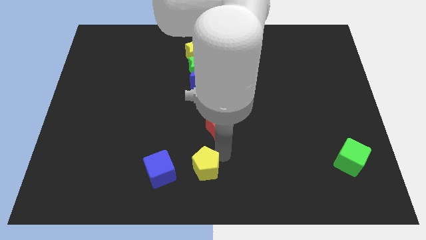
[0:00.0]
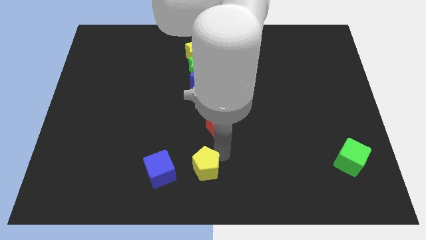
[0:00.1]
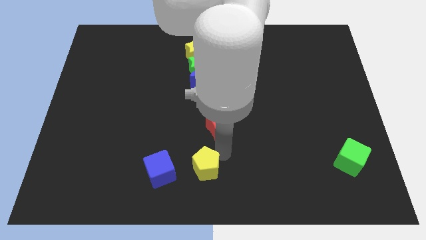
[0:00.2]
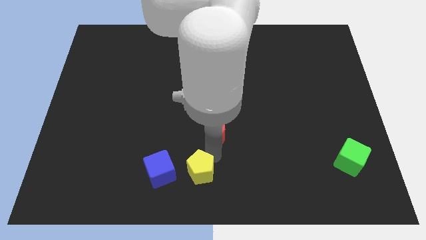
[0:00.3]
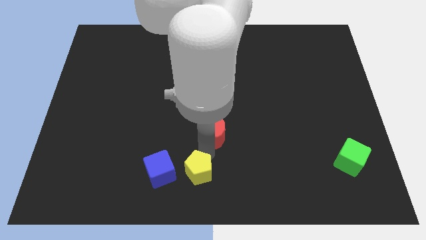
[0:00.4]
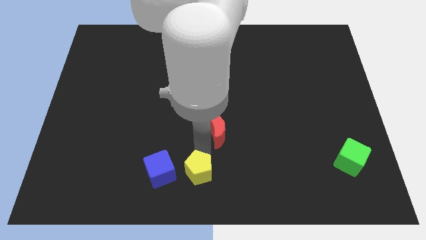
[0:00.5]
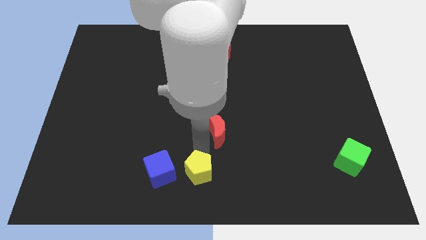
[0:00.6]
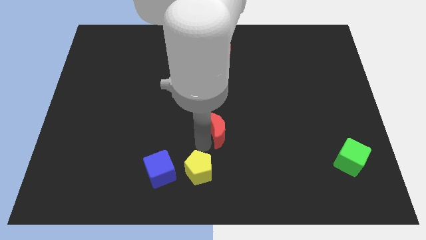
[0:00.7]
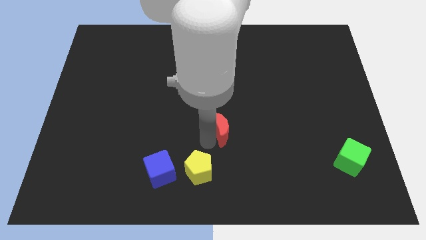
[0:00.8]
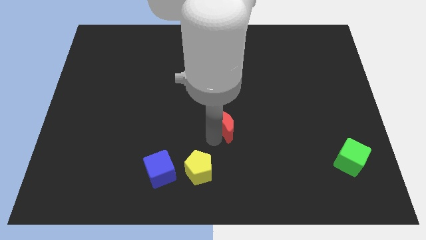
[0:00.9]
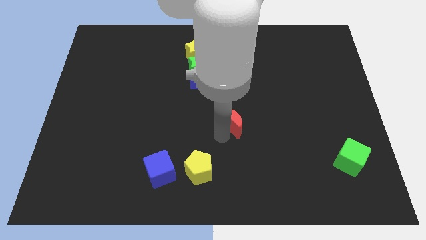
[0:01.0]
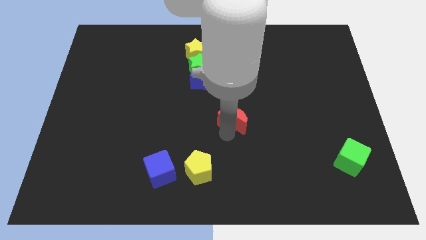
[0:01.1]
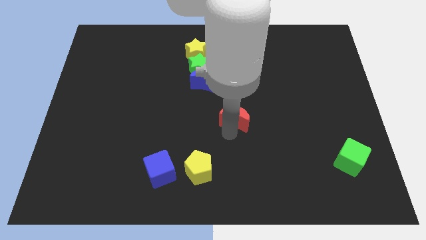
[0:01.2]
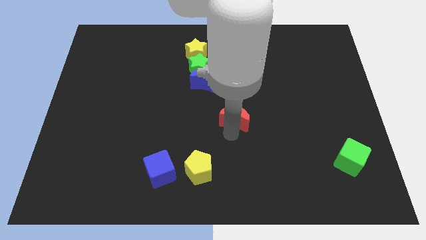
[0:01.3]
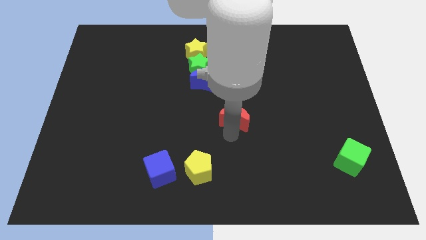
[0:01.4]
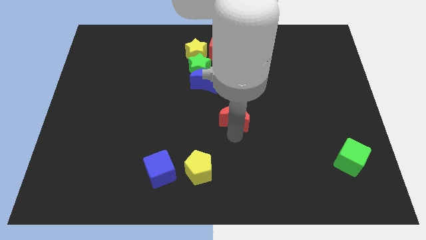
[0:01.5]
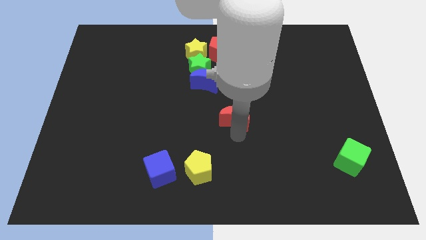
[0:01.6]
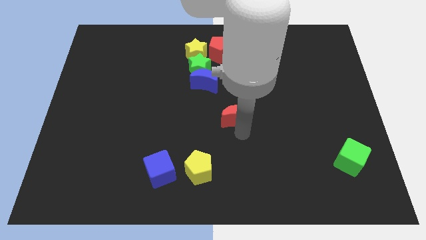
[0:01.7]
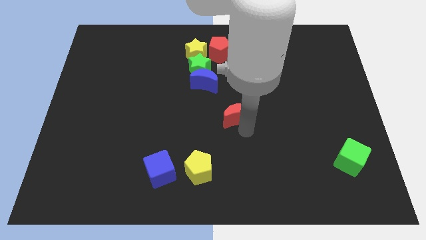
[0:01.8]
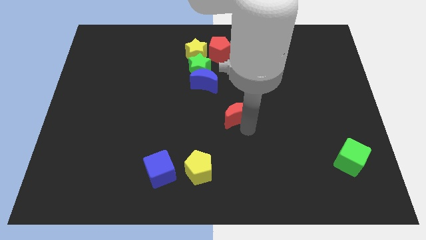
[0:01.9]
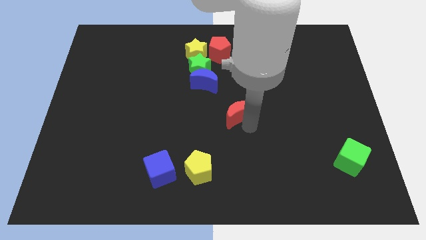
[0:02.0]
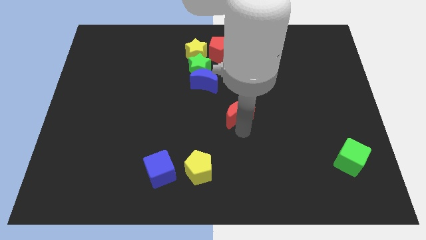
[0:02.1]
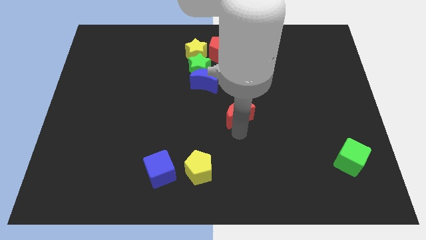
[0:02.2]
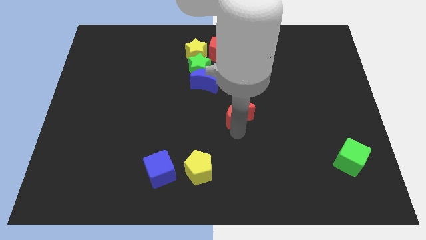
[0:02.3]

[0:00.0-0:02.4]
move the red crescent towards center of the board

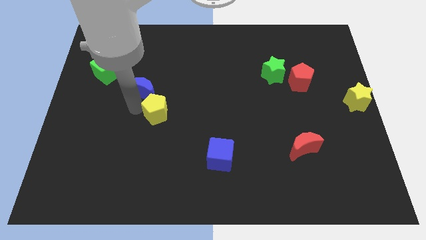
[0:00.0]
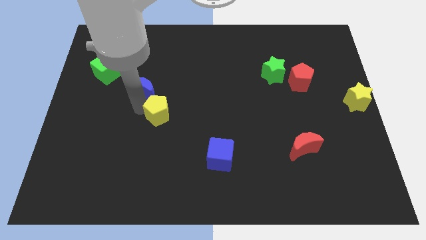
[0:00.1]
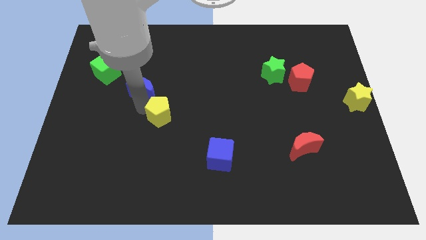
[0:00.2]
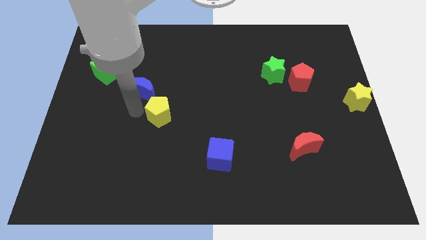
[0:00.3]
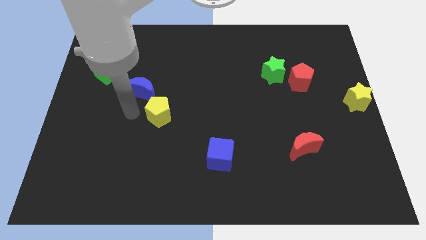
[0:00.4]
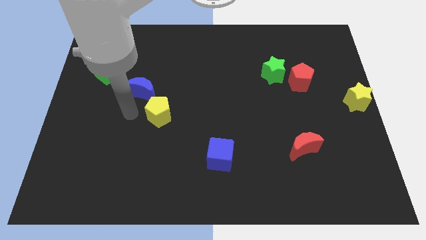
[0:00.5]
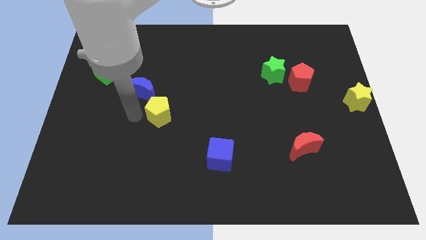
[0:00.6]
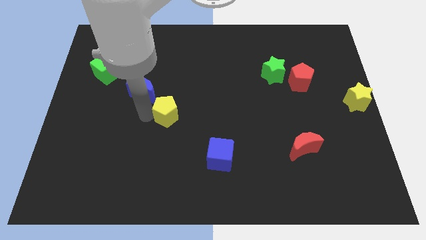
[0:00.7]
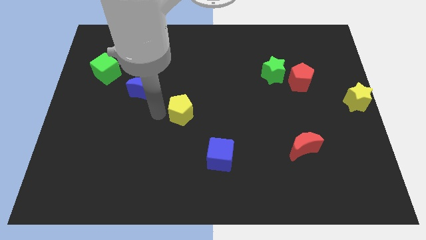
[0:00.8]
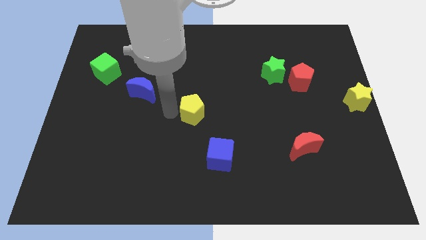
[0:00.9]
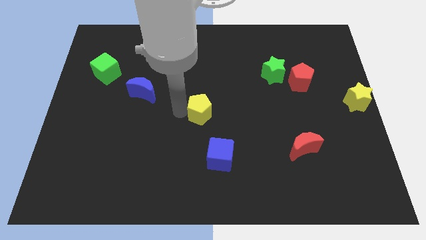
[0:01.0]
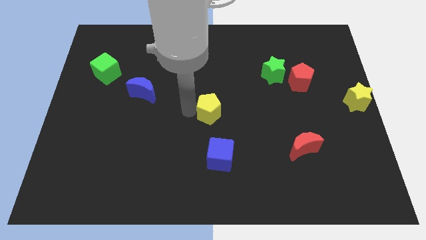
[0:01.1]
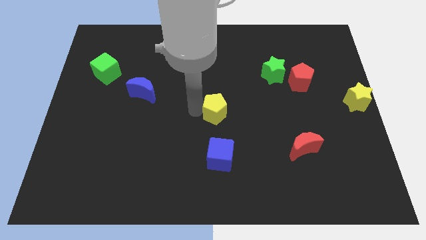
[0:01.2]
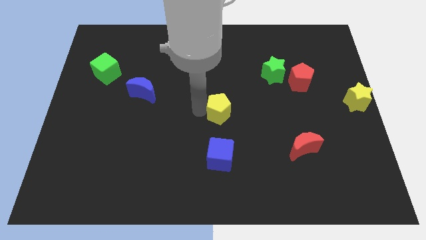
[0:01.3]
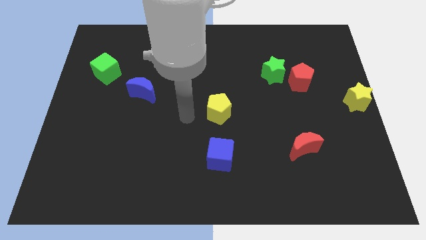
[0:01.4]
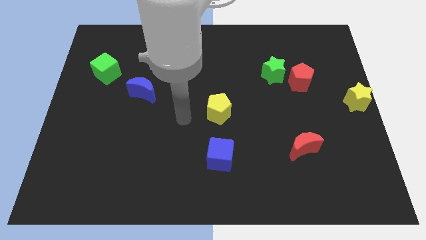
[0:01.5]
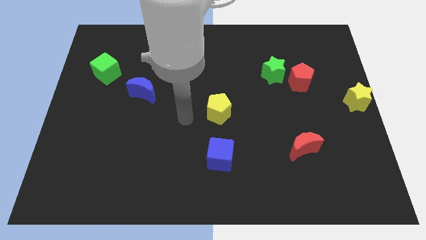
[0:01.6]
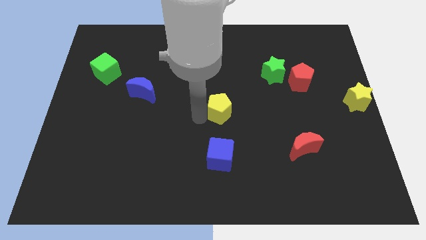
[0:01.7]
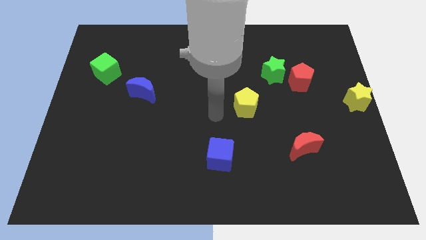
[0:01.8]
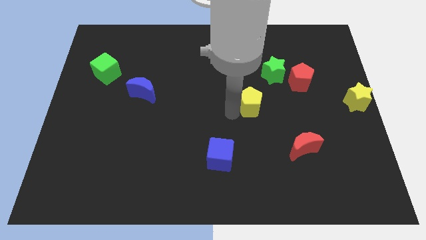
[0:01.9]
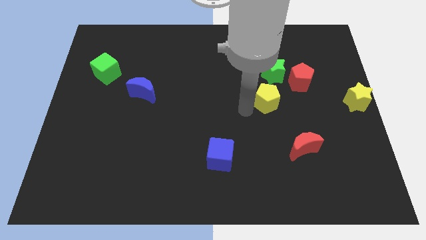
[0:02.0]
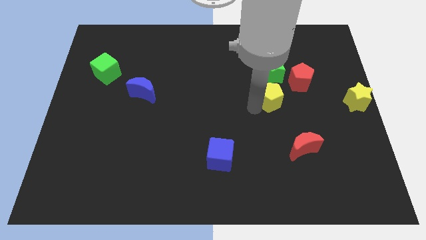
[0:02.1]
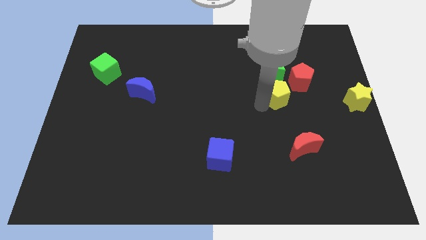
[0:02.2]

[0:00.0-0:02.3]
move yellow pentagon at the bottom of green star

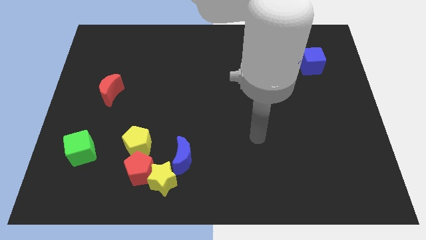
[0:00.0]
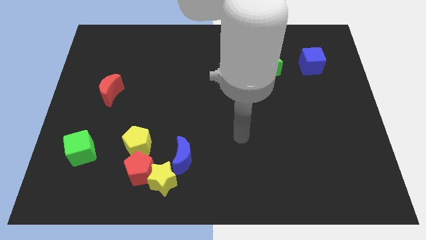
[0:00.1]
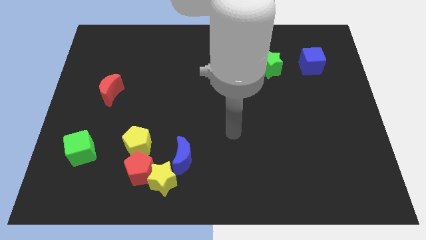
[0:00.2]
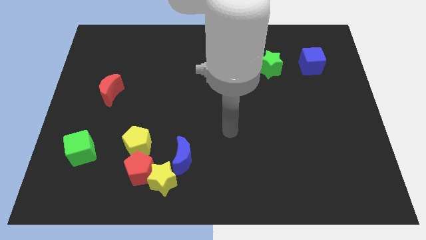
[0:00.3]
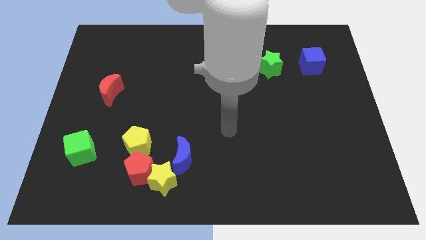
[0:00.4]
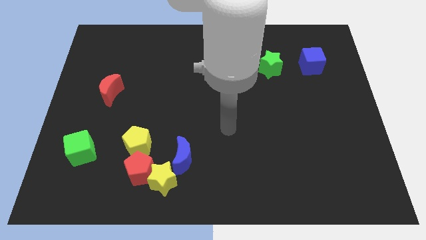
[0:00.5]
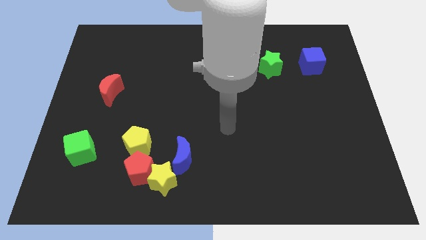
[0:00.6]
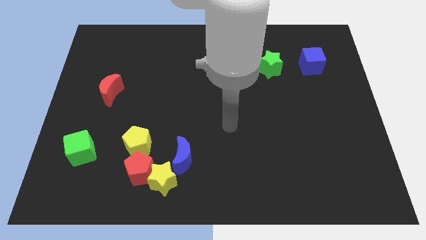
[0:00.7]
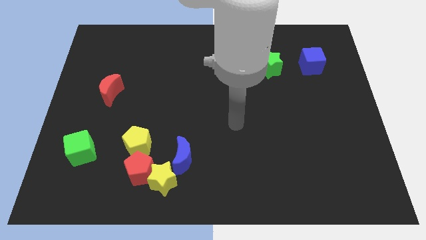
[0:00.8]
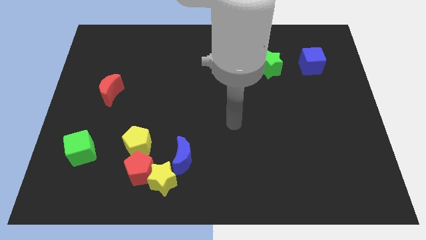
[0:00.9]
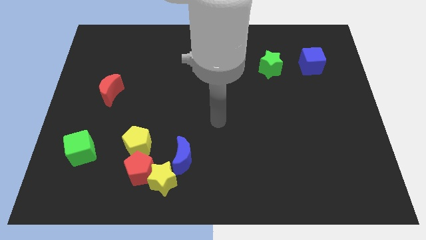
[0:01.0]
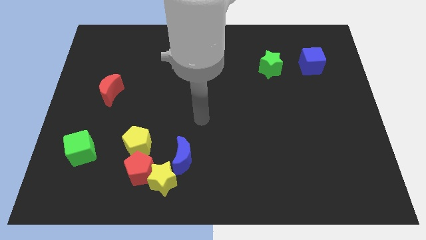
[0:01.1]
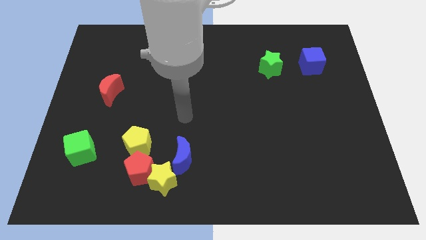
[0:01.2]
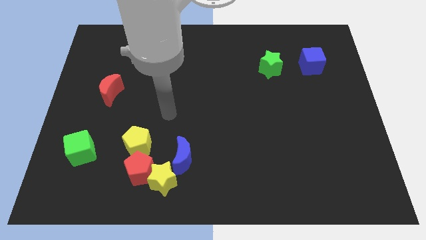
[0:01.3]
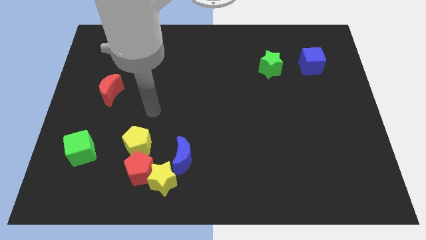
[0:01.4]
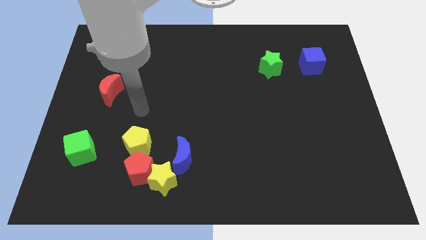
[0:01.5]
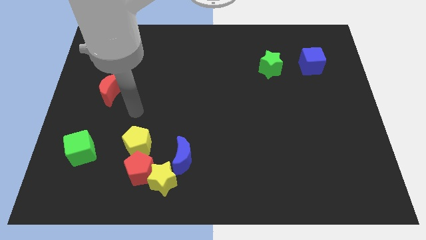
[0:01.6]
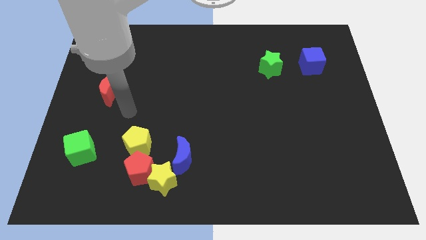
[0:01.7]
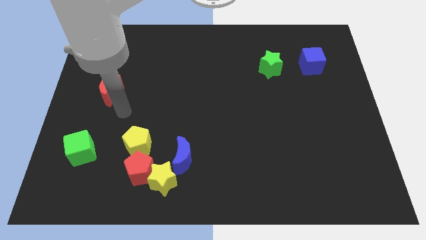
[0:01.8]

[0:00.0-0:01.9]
move your arm towards the red crescent

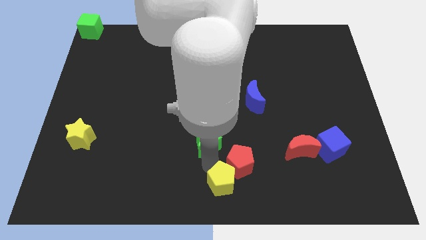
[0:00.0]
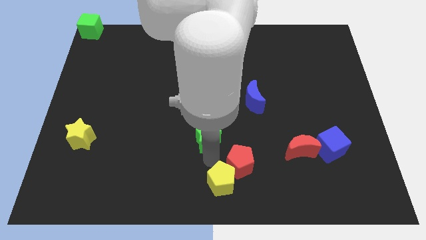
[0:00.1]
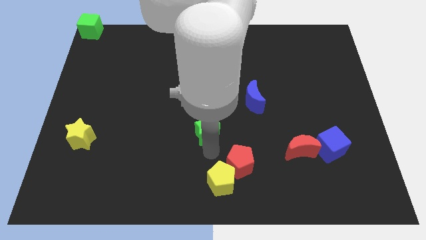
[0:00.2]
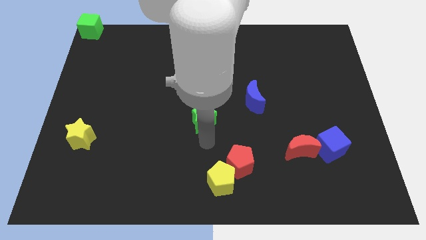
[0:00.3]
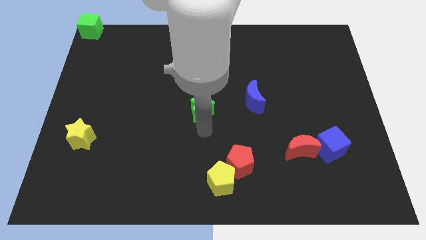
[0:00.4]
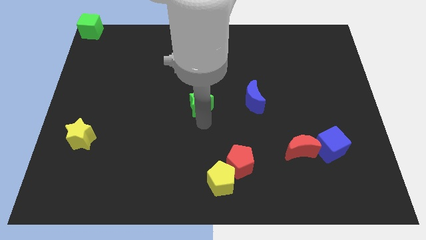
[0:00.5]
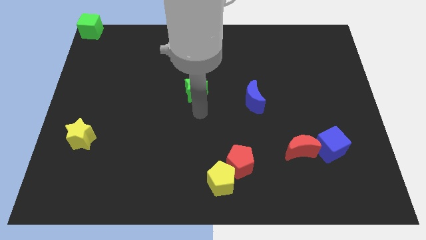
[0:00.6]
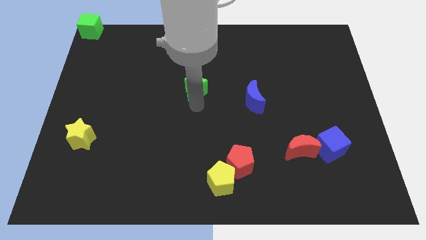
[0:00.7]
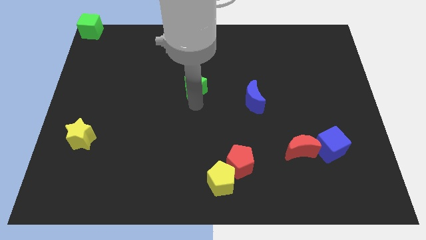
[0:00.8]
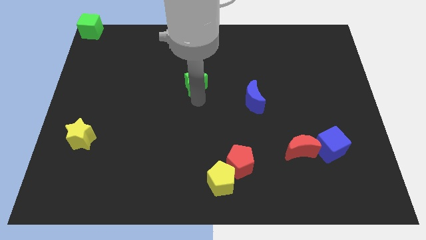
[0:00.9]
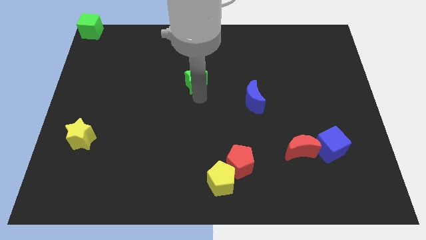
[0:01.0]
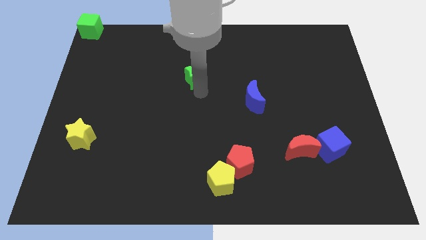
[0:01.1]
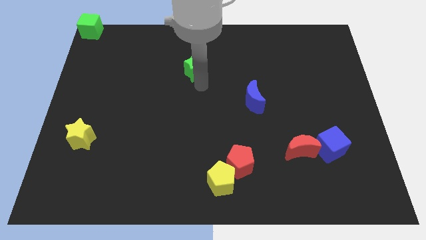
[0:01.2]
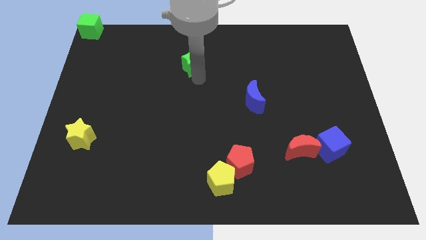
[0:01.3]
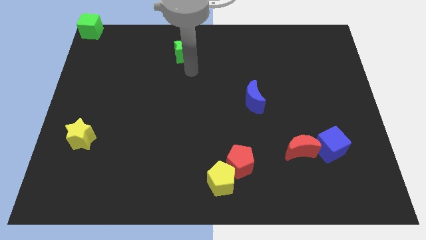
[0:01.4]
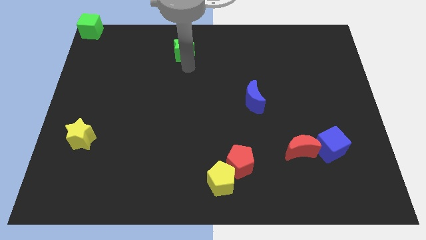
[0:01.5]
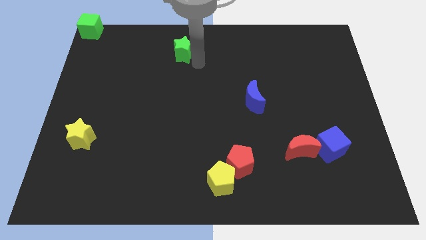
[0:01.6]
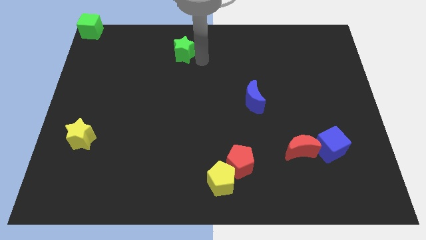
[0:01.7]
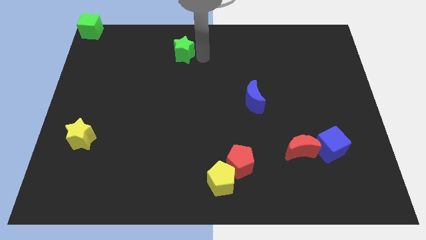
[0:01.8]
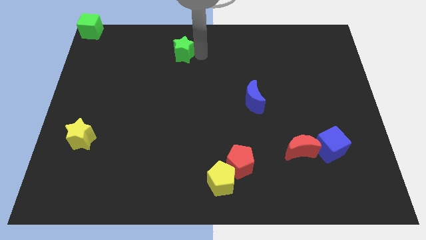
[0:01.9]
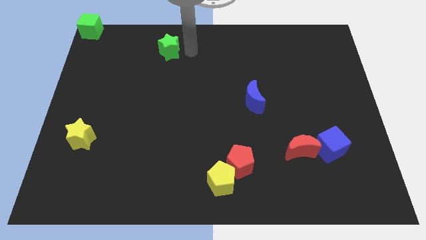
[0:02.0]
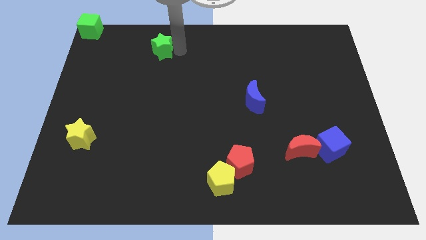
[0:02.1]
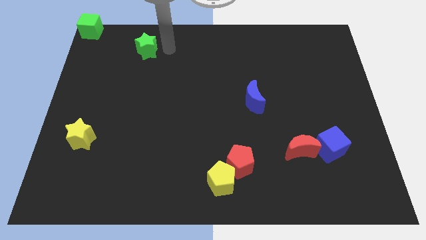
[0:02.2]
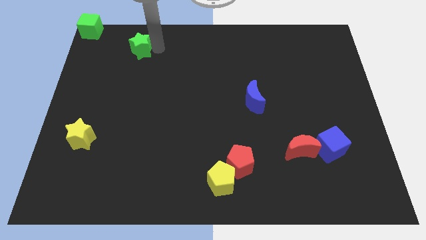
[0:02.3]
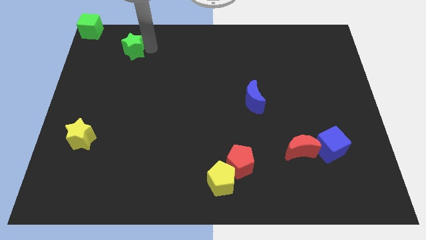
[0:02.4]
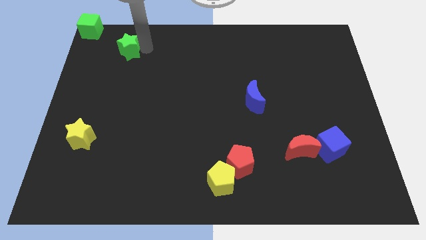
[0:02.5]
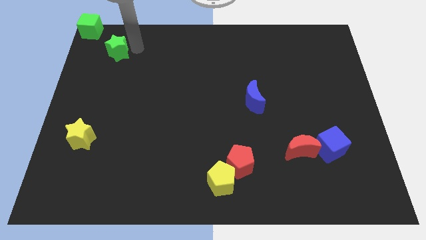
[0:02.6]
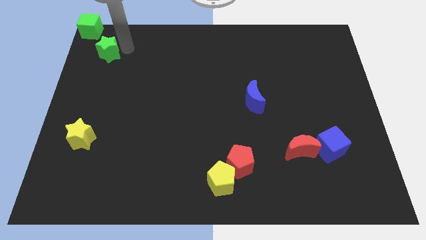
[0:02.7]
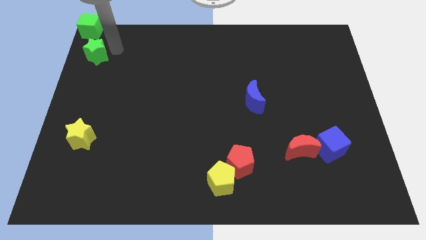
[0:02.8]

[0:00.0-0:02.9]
move the green star towards the green cube
